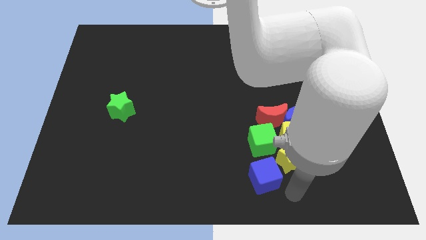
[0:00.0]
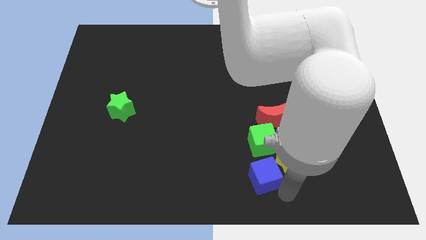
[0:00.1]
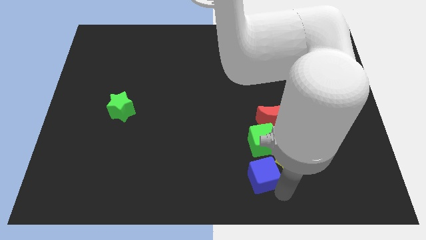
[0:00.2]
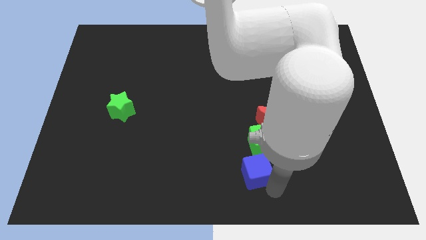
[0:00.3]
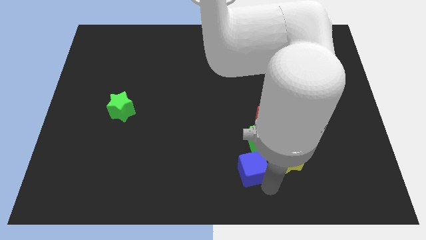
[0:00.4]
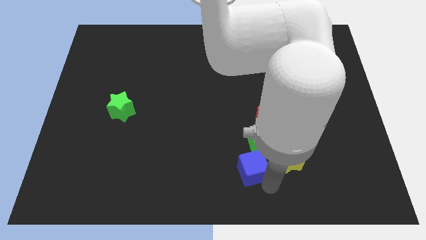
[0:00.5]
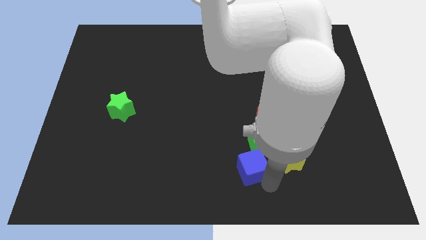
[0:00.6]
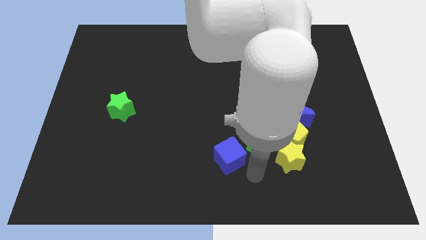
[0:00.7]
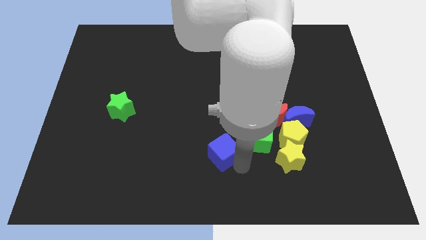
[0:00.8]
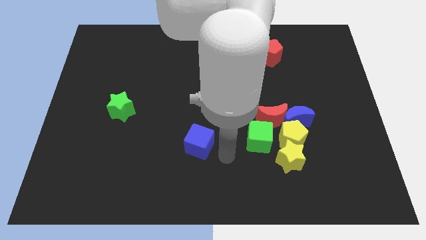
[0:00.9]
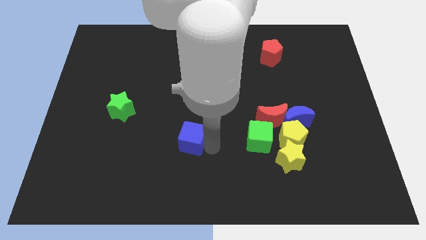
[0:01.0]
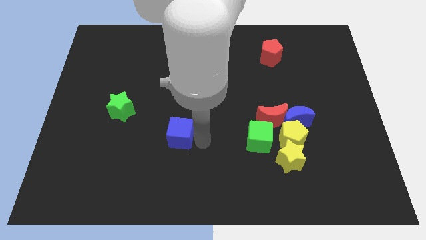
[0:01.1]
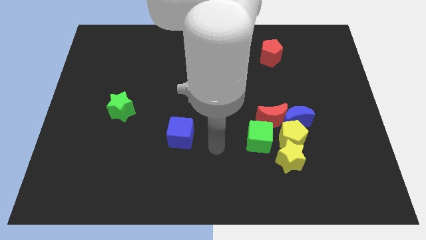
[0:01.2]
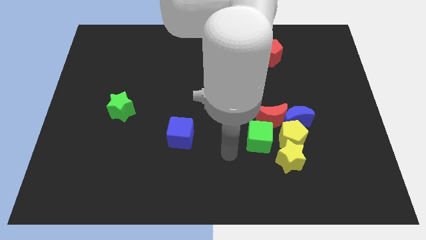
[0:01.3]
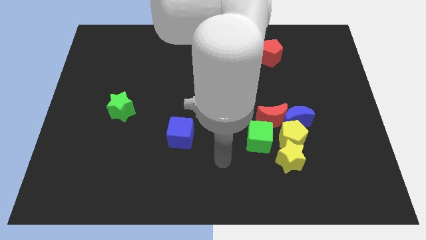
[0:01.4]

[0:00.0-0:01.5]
place the blue cube to the left of the green cube

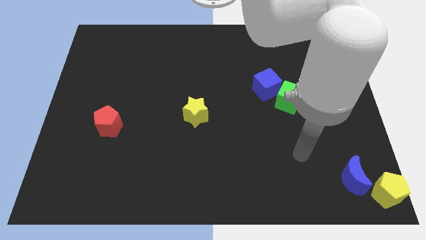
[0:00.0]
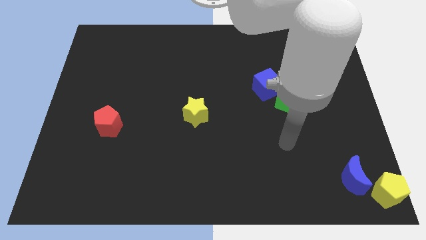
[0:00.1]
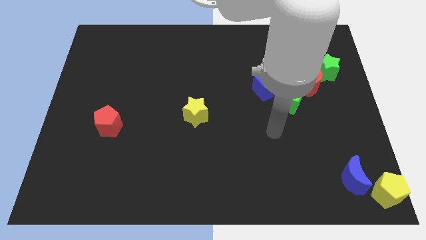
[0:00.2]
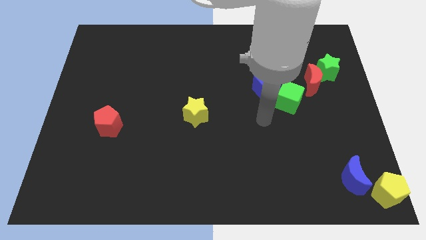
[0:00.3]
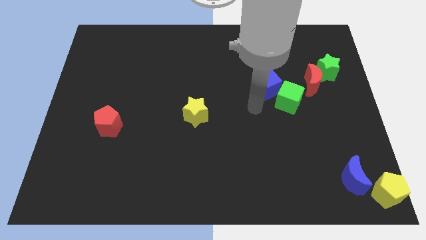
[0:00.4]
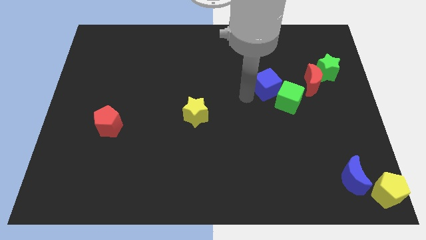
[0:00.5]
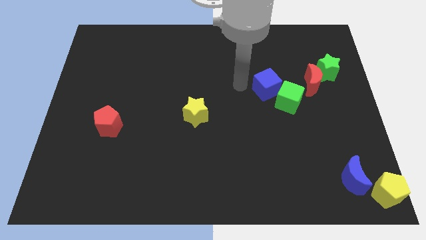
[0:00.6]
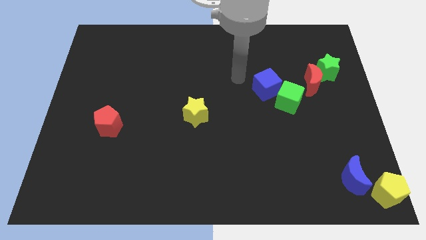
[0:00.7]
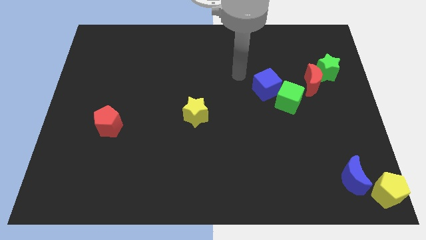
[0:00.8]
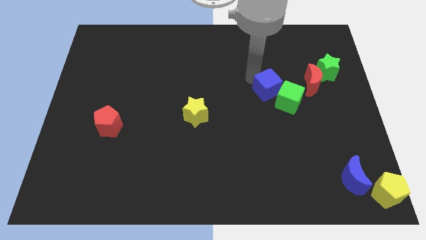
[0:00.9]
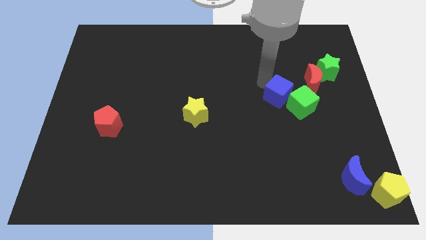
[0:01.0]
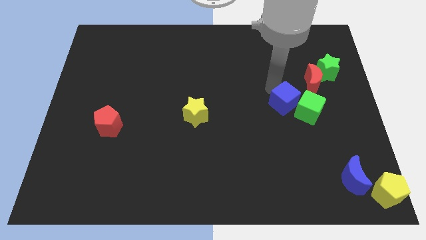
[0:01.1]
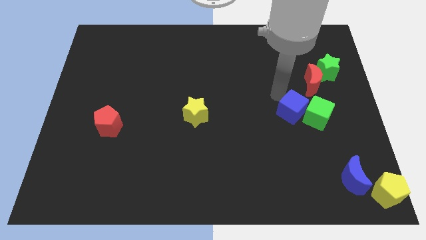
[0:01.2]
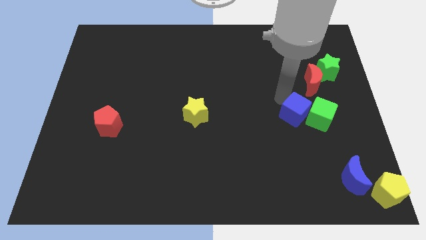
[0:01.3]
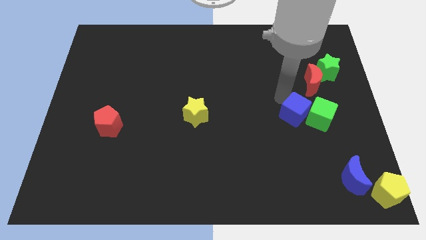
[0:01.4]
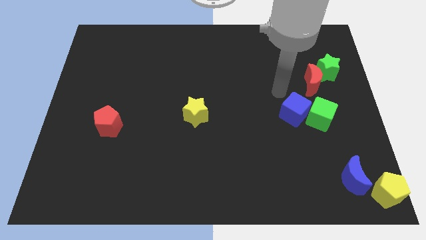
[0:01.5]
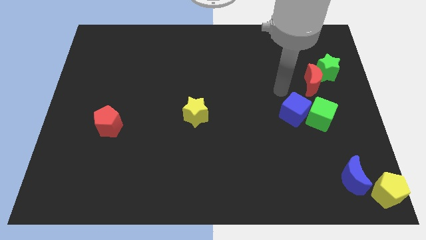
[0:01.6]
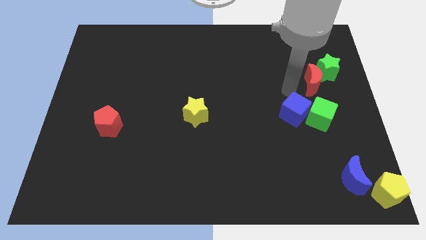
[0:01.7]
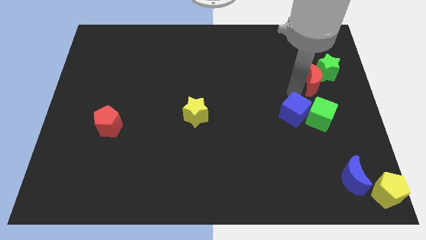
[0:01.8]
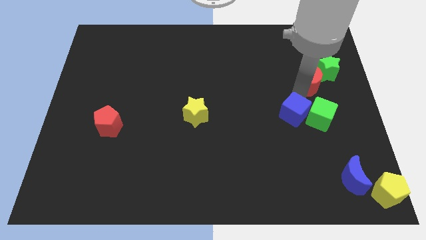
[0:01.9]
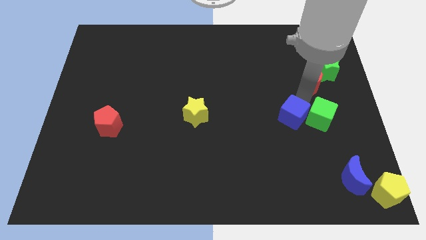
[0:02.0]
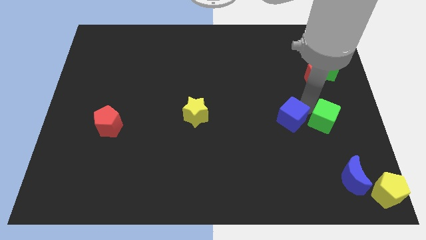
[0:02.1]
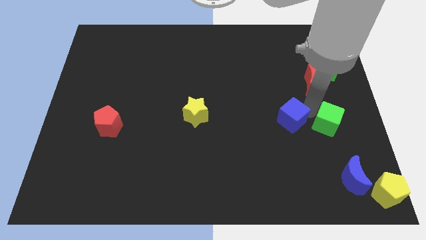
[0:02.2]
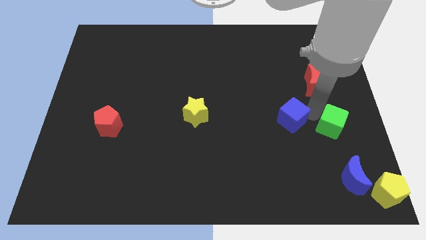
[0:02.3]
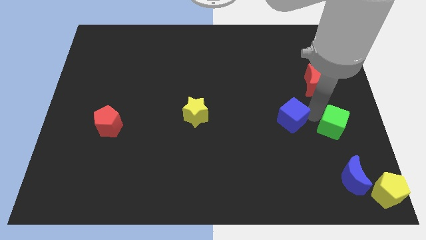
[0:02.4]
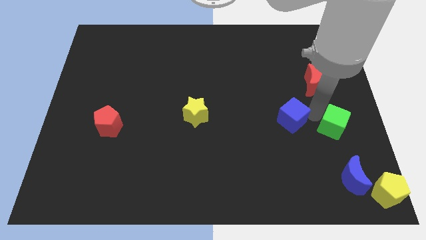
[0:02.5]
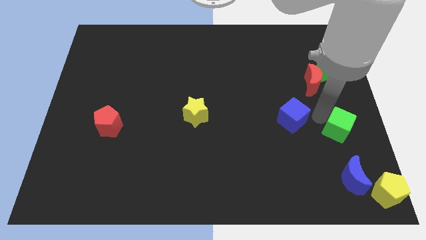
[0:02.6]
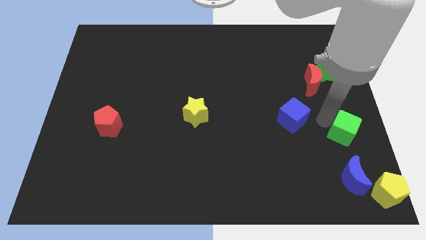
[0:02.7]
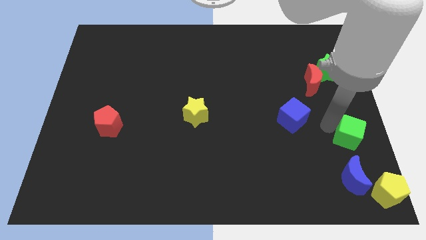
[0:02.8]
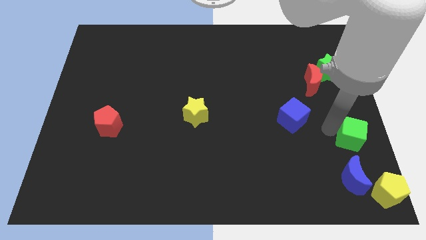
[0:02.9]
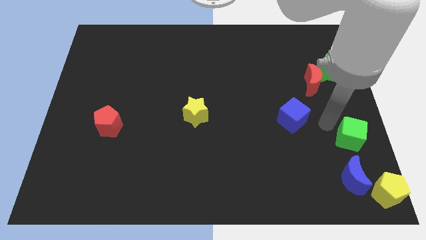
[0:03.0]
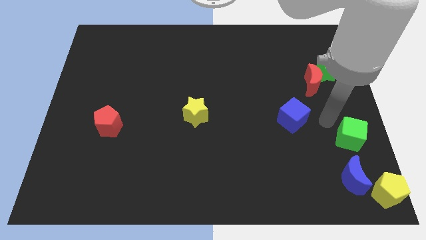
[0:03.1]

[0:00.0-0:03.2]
put the green cube to the top side of the blue crescent

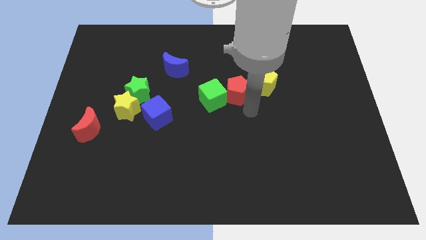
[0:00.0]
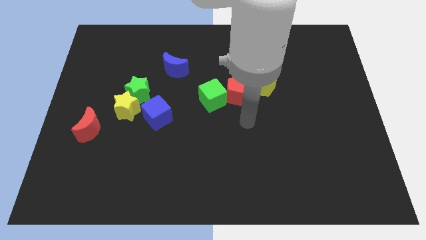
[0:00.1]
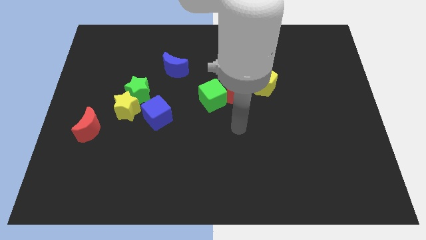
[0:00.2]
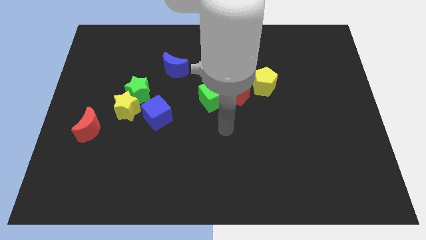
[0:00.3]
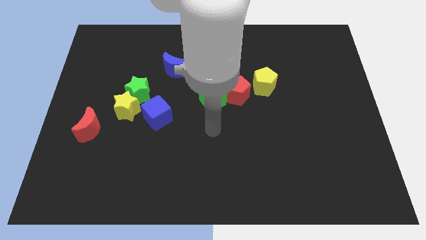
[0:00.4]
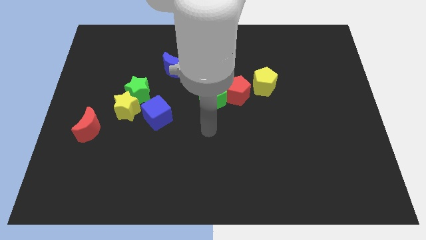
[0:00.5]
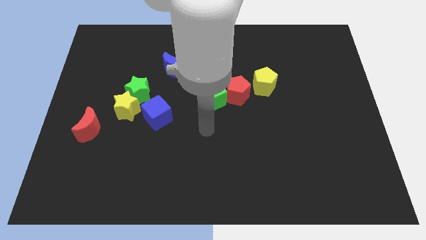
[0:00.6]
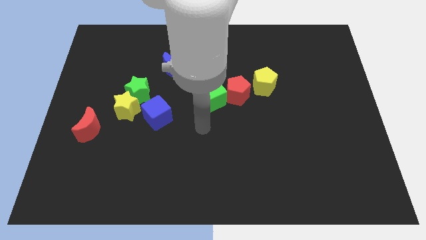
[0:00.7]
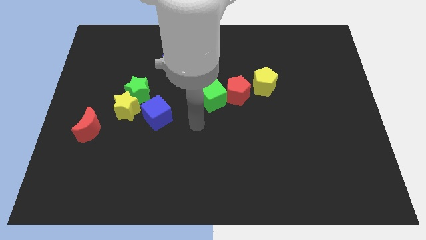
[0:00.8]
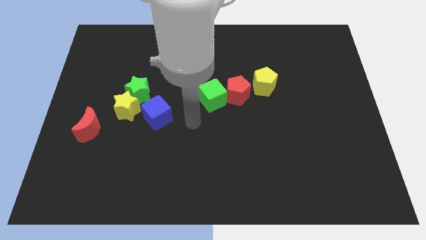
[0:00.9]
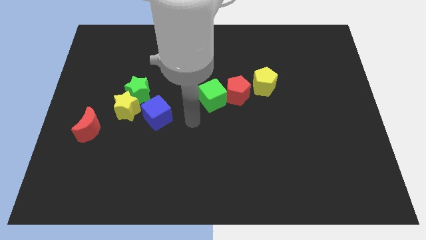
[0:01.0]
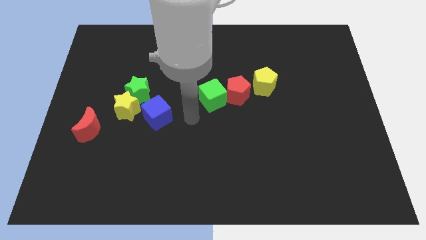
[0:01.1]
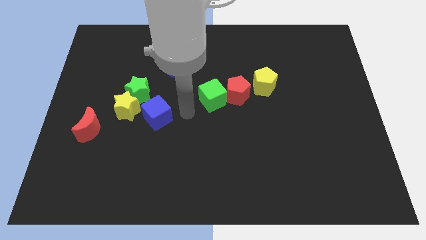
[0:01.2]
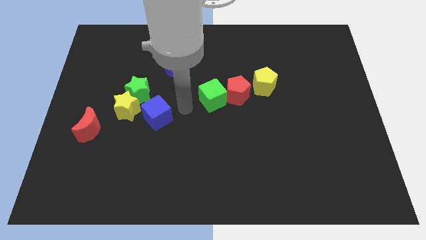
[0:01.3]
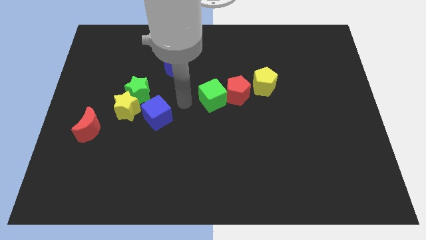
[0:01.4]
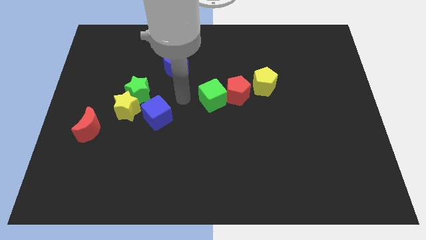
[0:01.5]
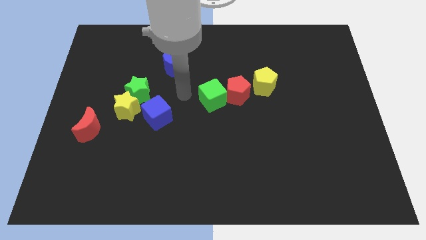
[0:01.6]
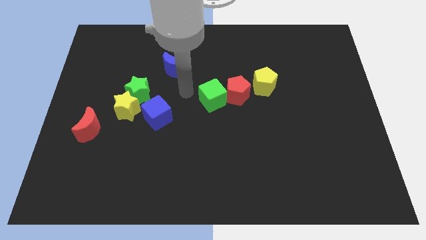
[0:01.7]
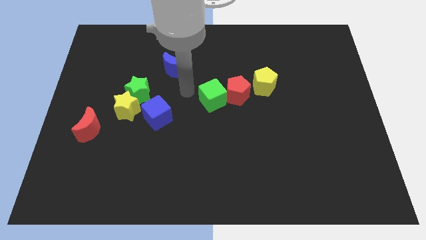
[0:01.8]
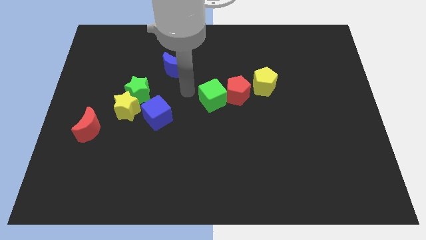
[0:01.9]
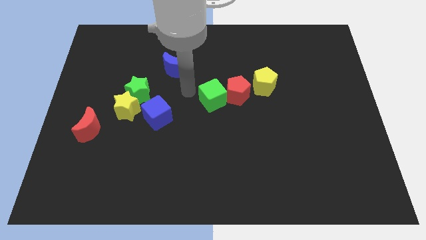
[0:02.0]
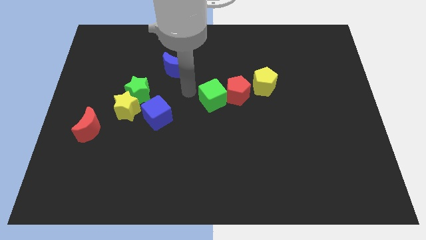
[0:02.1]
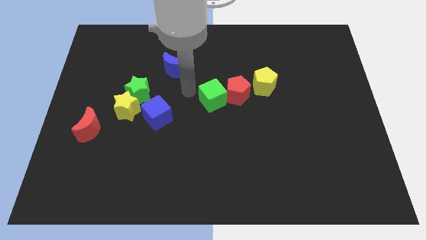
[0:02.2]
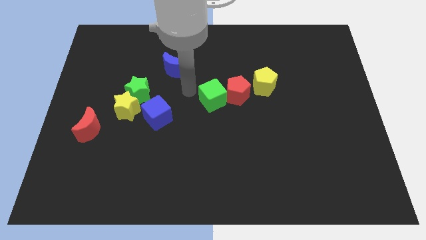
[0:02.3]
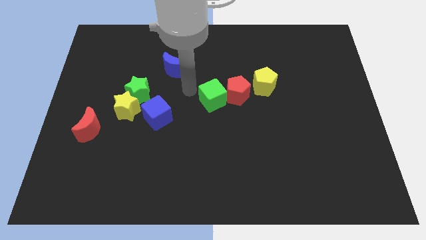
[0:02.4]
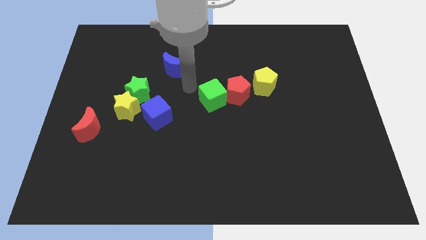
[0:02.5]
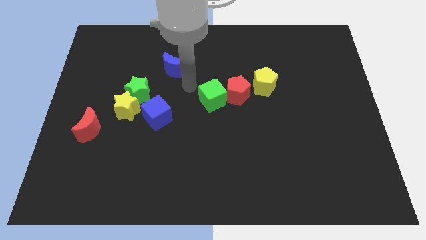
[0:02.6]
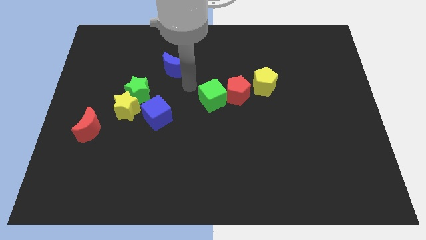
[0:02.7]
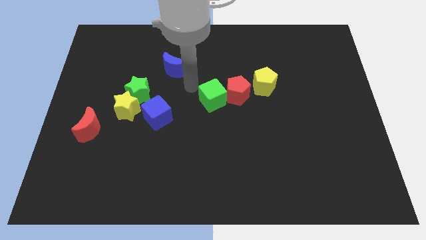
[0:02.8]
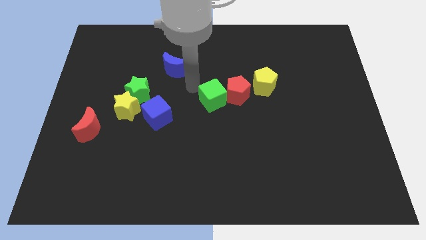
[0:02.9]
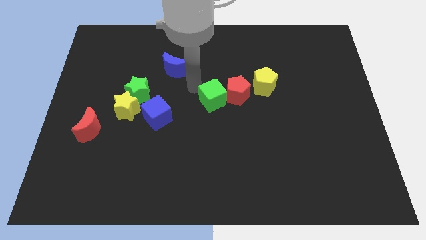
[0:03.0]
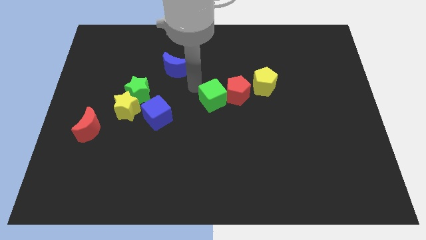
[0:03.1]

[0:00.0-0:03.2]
point your arm in between the blue moon and green cube

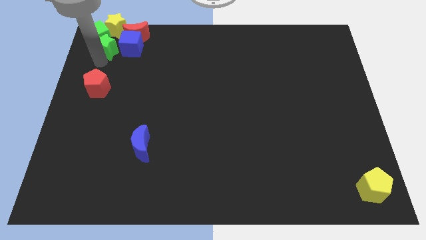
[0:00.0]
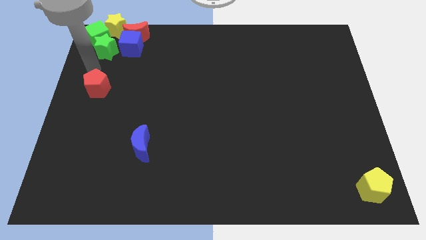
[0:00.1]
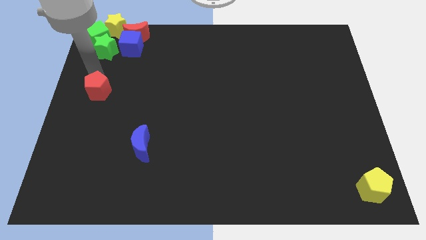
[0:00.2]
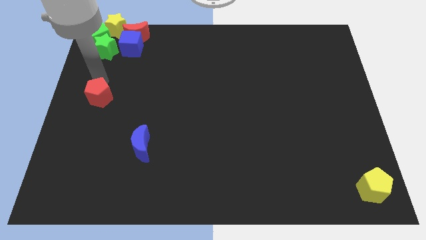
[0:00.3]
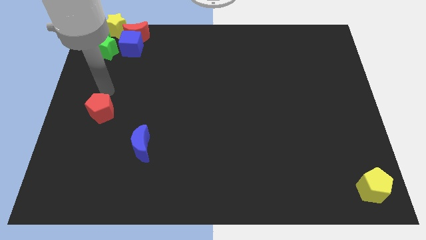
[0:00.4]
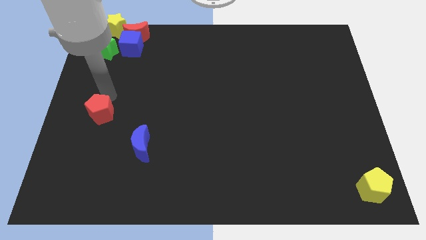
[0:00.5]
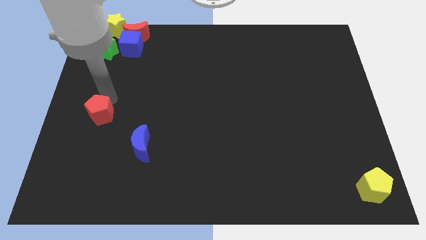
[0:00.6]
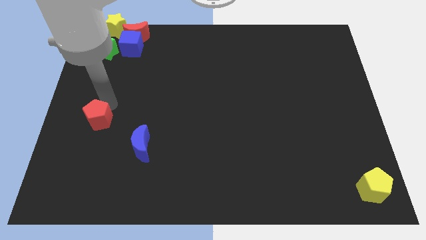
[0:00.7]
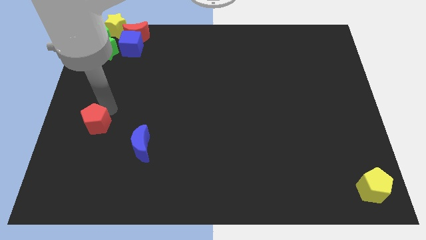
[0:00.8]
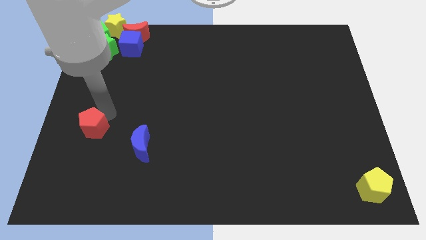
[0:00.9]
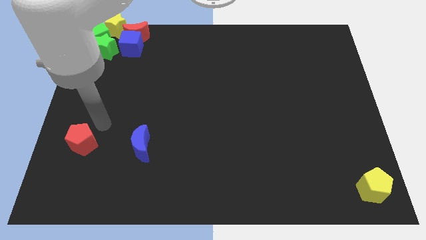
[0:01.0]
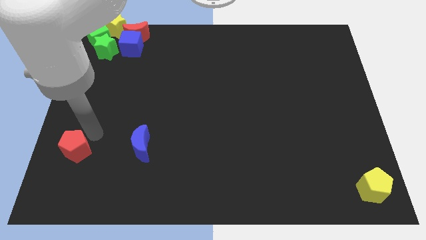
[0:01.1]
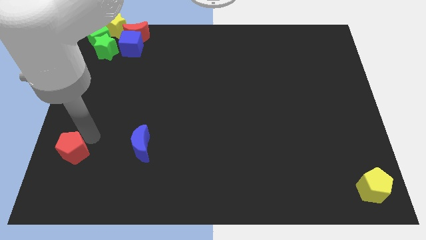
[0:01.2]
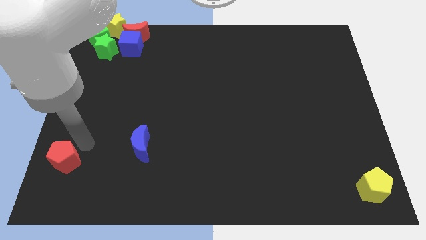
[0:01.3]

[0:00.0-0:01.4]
place the red pentagon to the left side of the blue moon
